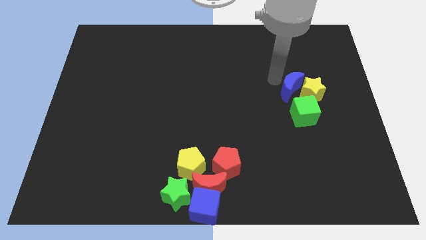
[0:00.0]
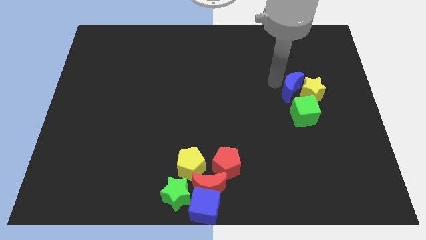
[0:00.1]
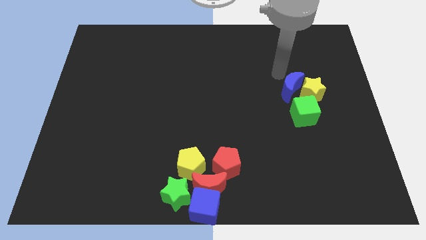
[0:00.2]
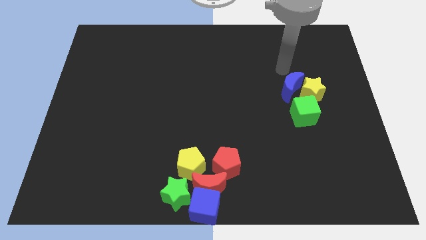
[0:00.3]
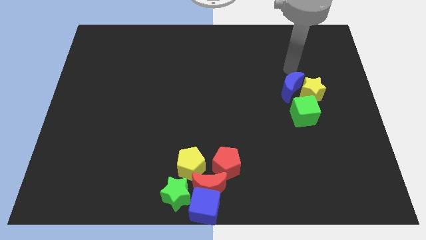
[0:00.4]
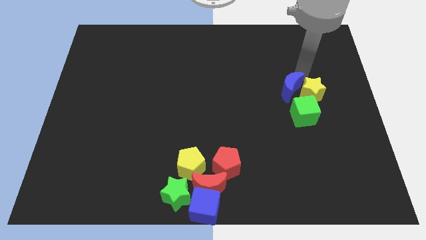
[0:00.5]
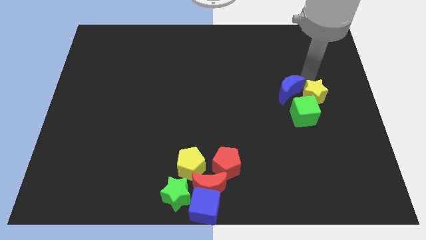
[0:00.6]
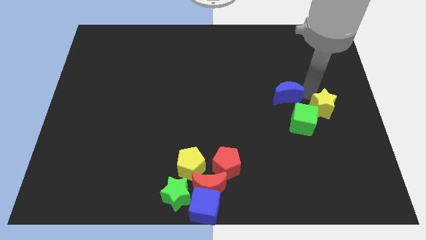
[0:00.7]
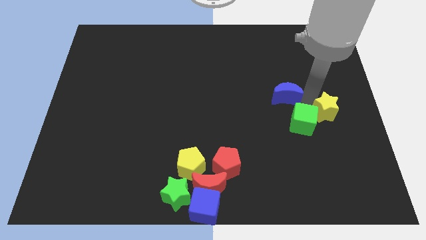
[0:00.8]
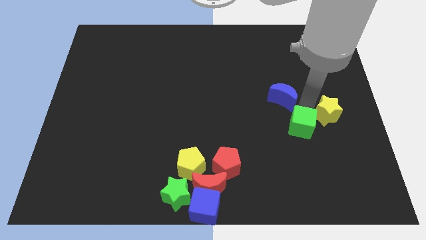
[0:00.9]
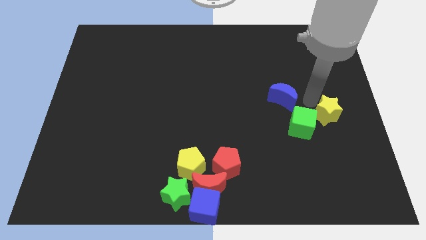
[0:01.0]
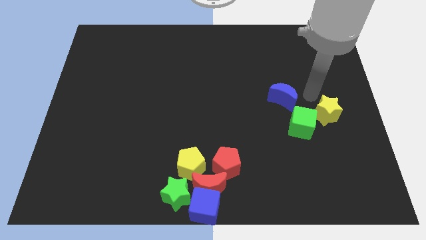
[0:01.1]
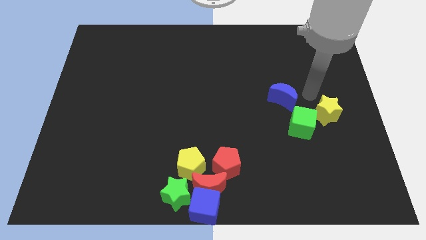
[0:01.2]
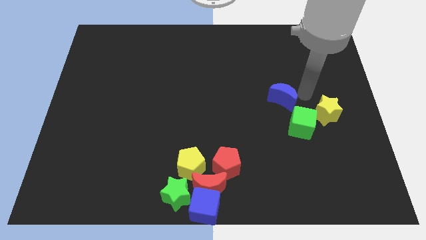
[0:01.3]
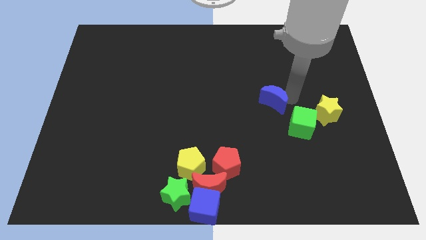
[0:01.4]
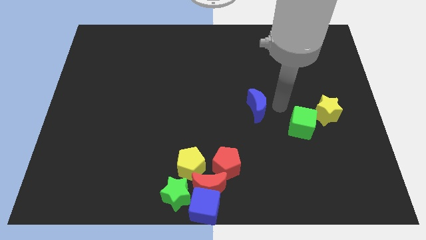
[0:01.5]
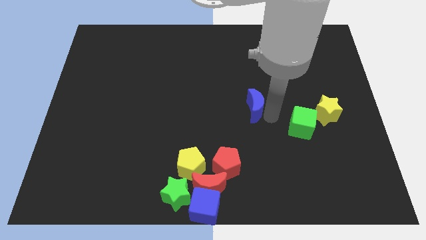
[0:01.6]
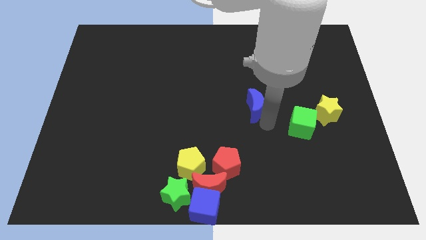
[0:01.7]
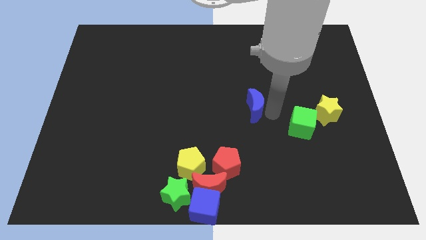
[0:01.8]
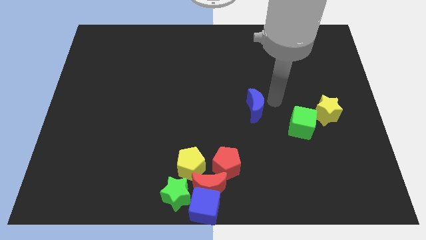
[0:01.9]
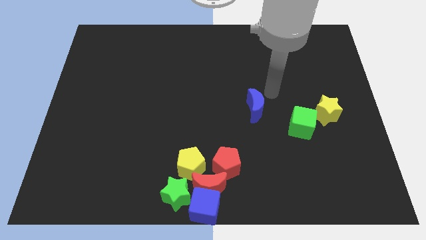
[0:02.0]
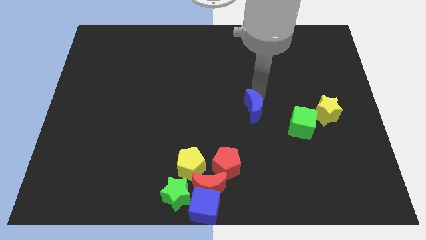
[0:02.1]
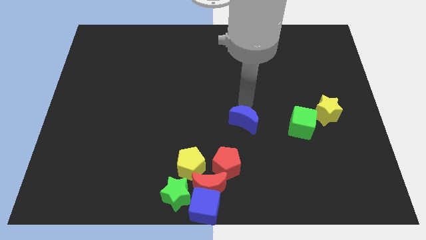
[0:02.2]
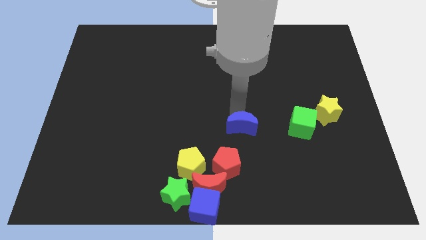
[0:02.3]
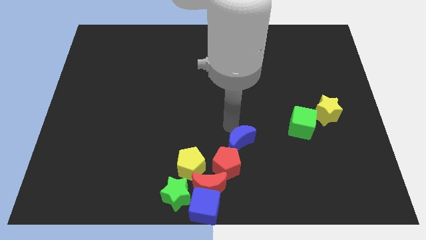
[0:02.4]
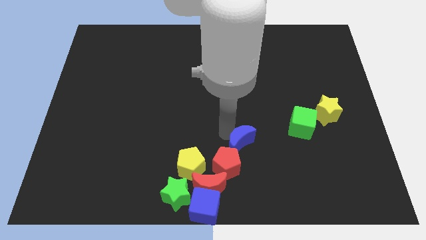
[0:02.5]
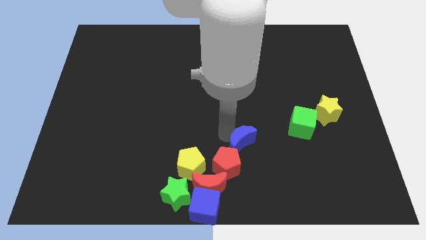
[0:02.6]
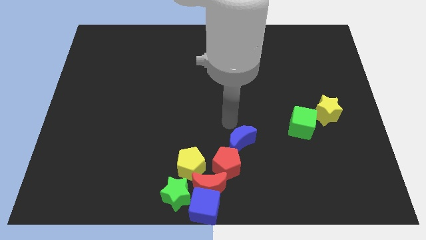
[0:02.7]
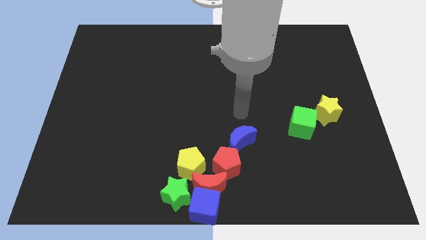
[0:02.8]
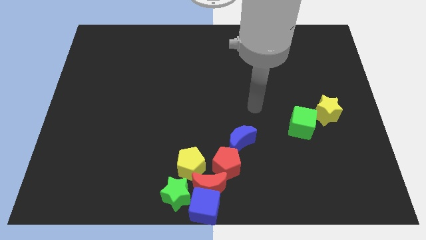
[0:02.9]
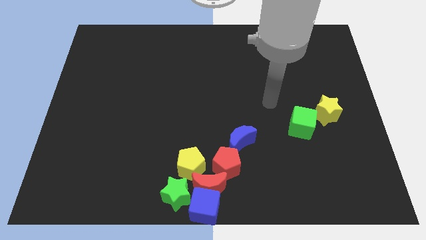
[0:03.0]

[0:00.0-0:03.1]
separate blue moon from yellow star towards top of red pentagon

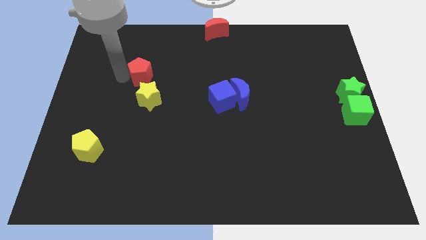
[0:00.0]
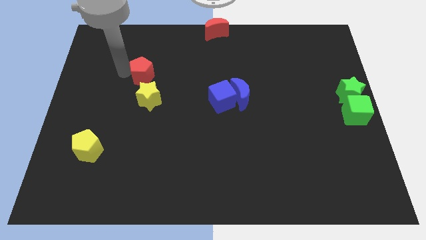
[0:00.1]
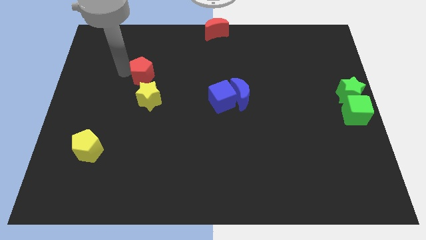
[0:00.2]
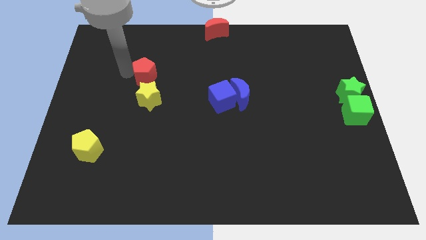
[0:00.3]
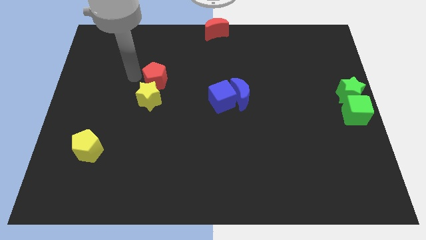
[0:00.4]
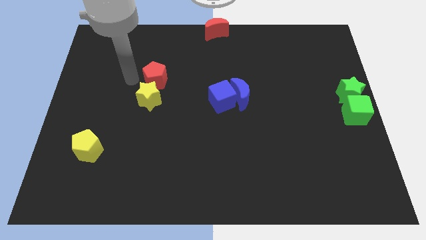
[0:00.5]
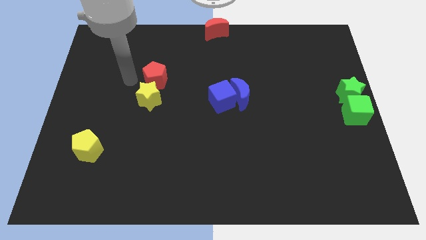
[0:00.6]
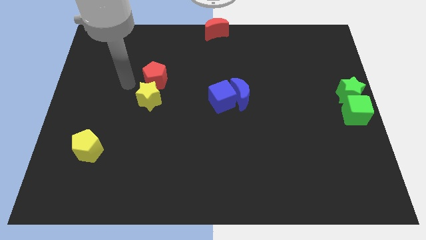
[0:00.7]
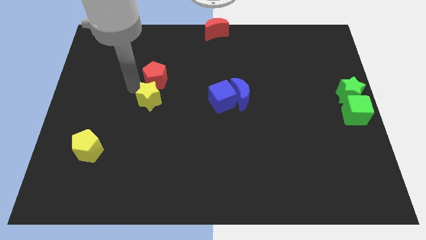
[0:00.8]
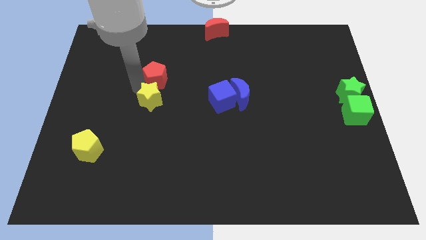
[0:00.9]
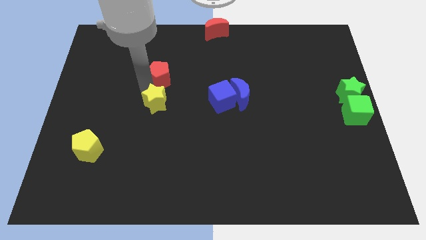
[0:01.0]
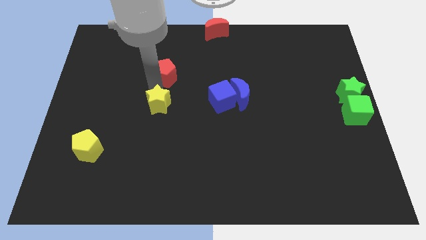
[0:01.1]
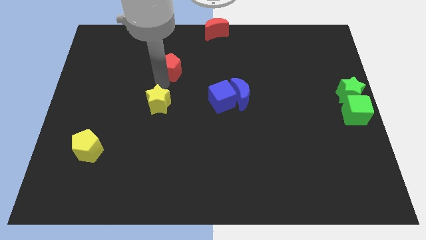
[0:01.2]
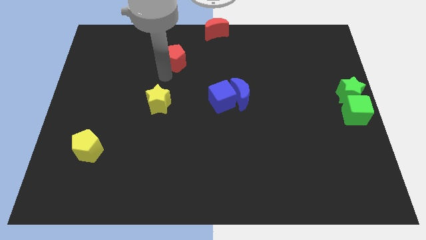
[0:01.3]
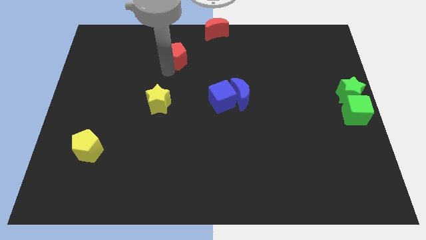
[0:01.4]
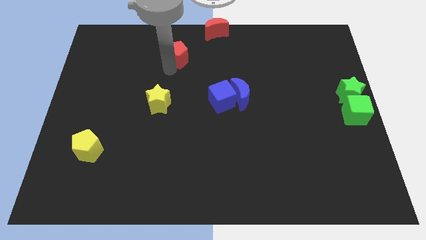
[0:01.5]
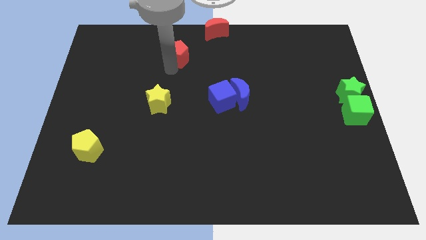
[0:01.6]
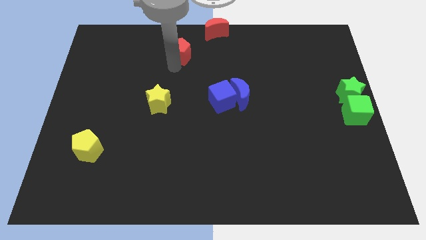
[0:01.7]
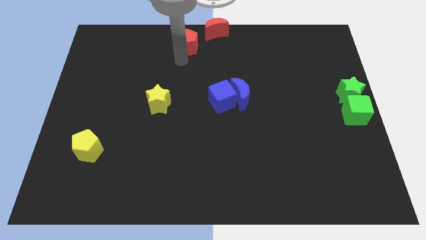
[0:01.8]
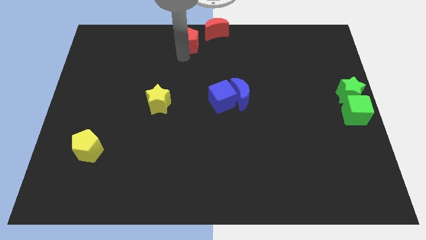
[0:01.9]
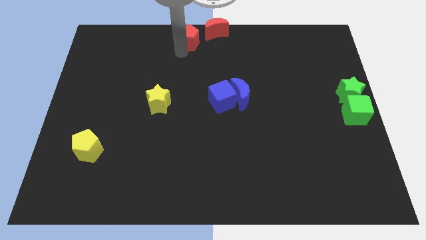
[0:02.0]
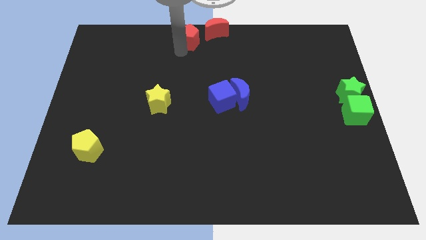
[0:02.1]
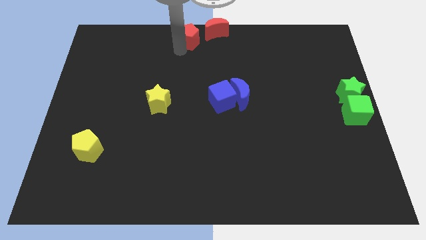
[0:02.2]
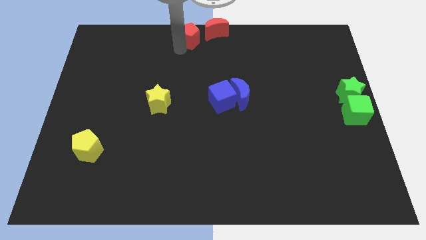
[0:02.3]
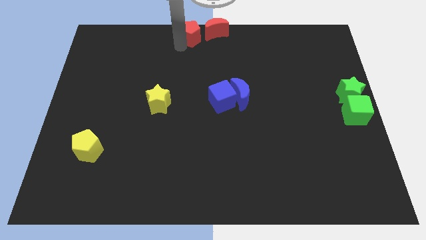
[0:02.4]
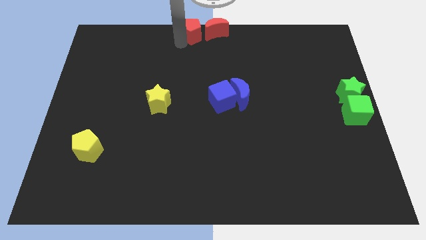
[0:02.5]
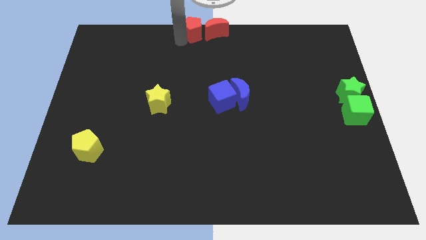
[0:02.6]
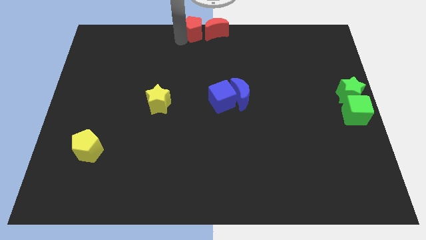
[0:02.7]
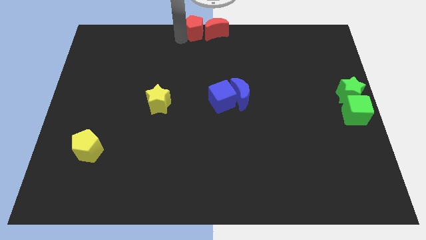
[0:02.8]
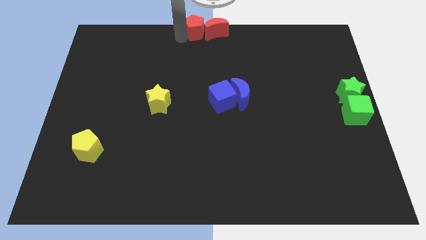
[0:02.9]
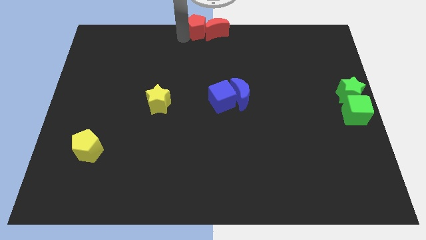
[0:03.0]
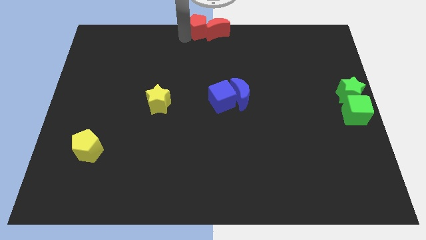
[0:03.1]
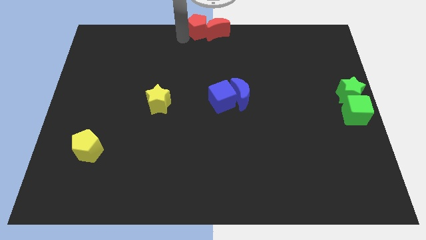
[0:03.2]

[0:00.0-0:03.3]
separate the yellow star and red pentagon

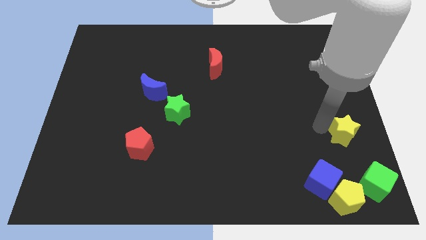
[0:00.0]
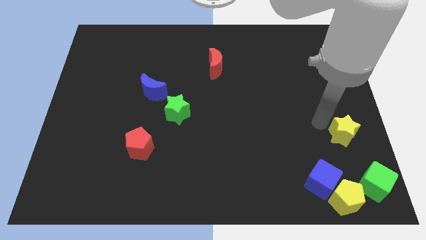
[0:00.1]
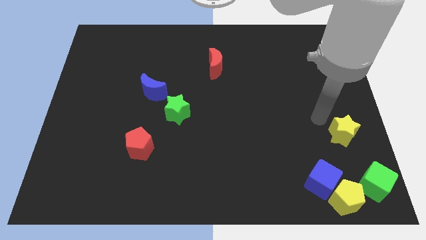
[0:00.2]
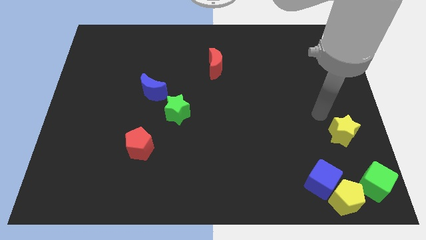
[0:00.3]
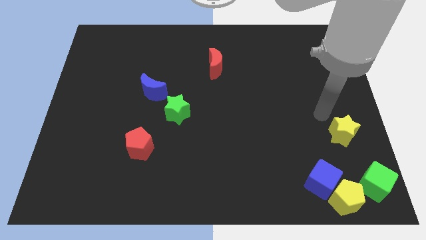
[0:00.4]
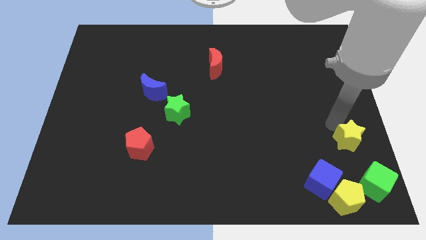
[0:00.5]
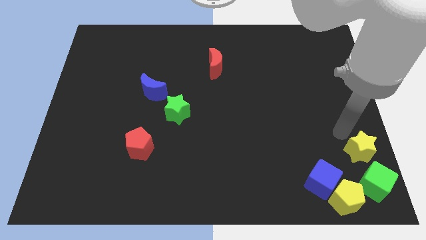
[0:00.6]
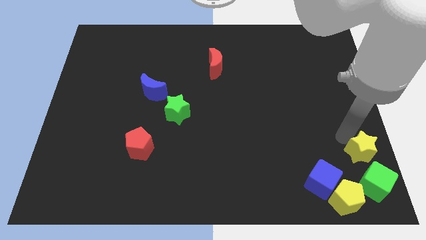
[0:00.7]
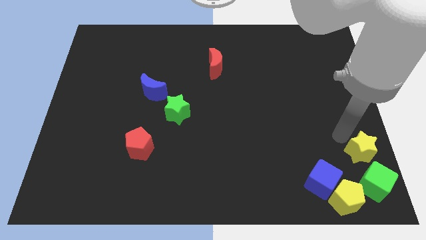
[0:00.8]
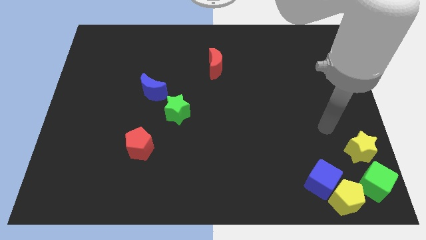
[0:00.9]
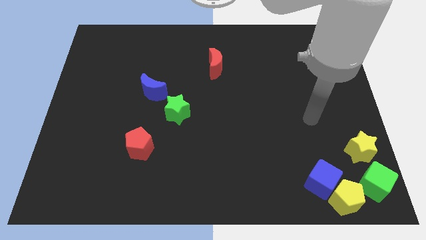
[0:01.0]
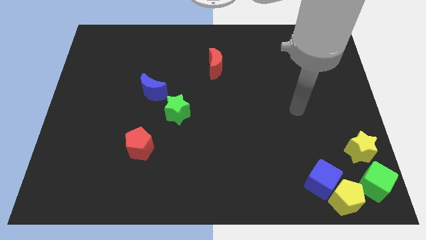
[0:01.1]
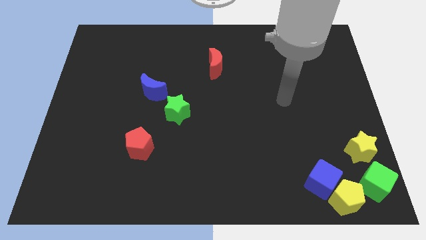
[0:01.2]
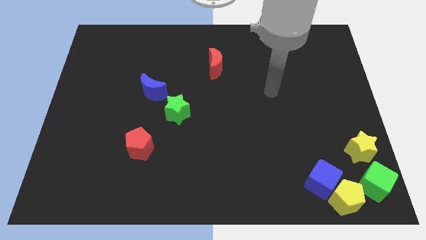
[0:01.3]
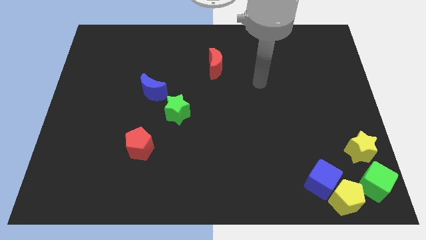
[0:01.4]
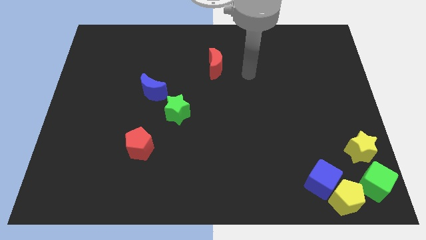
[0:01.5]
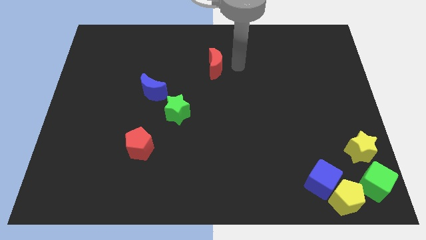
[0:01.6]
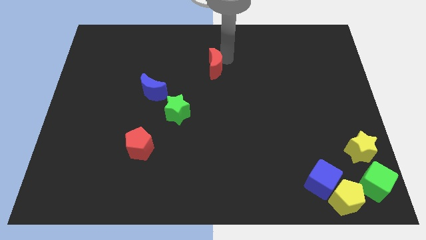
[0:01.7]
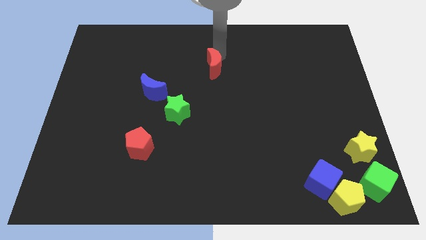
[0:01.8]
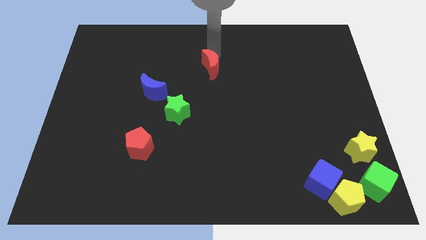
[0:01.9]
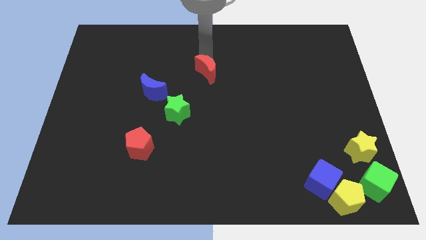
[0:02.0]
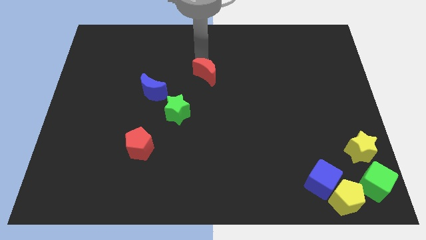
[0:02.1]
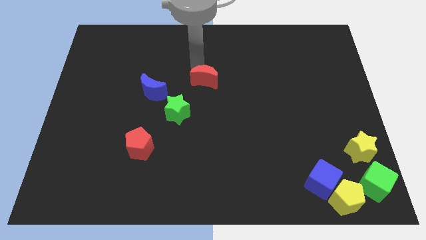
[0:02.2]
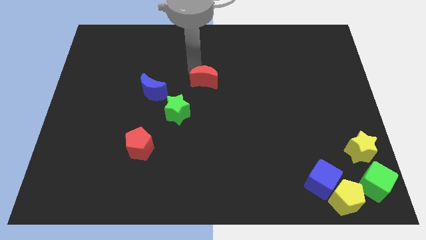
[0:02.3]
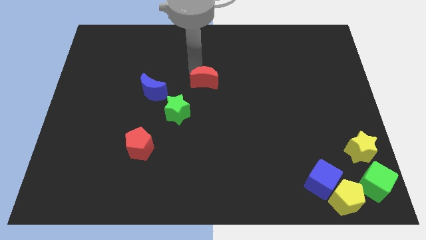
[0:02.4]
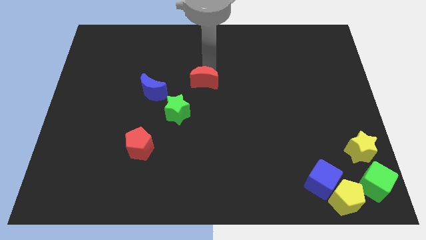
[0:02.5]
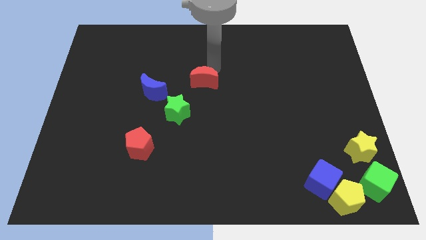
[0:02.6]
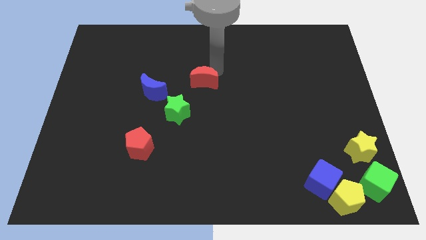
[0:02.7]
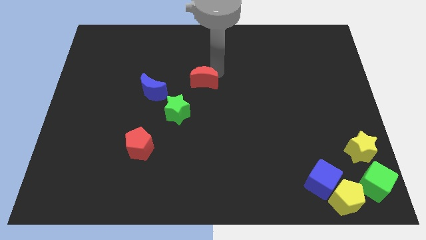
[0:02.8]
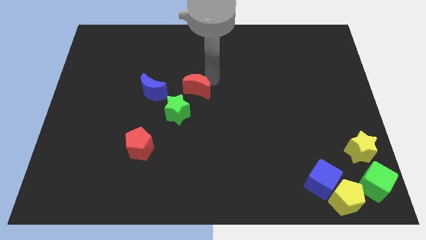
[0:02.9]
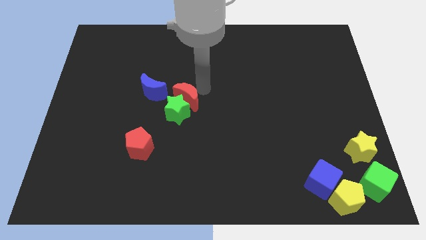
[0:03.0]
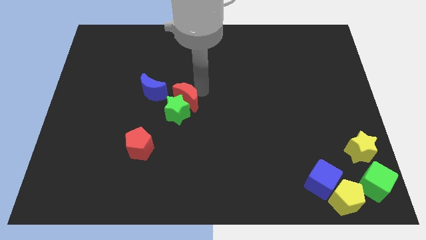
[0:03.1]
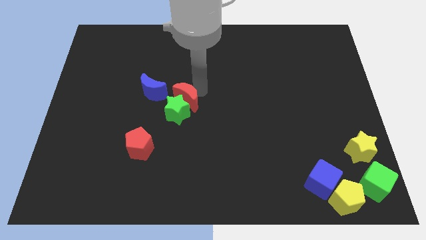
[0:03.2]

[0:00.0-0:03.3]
push red crescent towards green star
